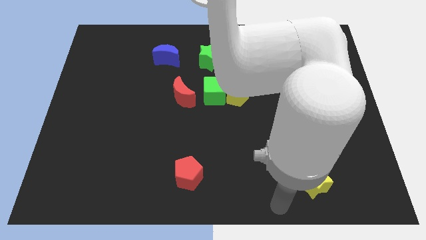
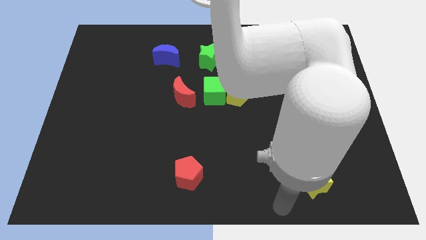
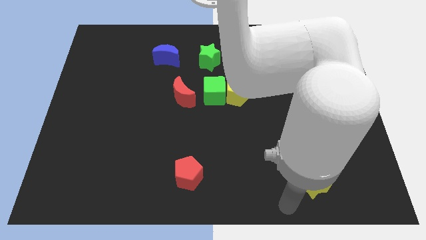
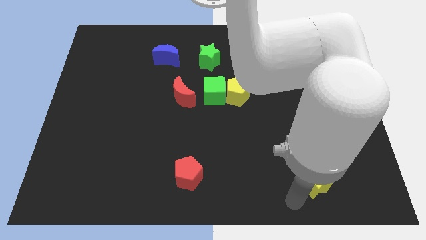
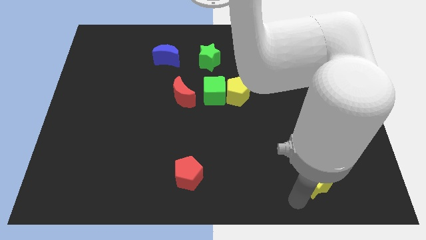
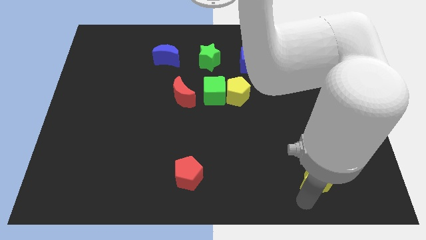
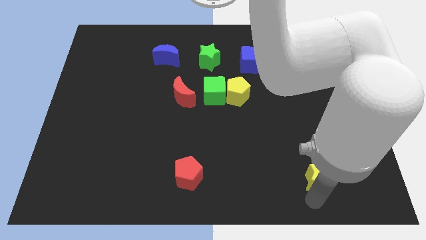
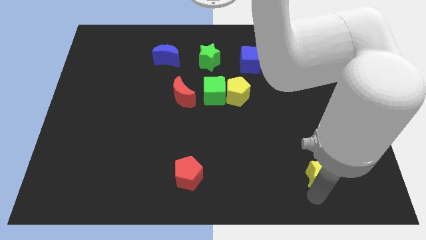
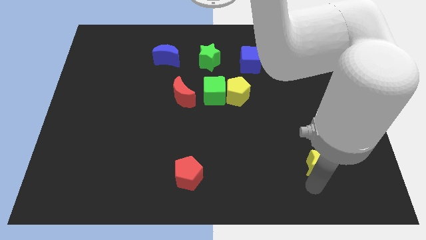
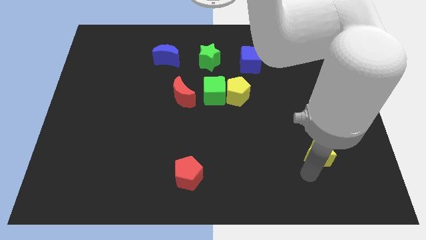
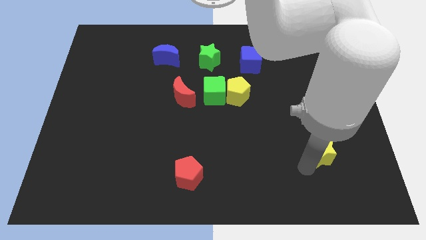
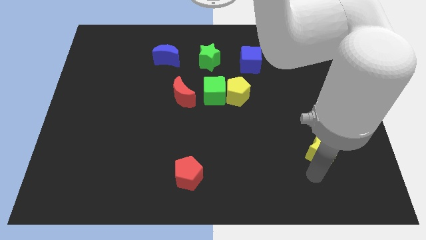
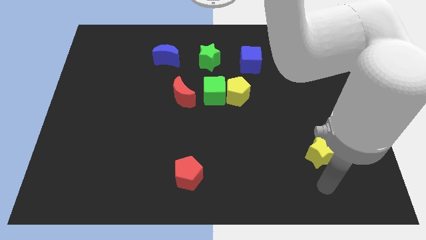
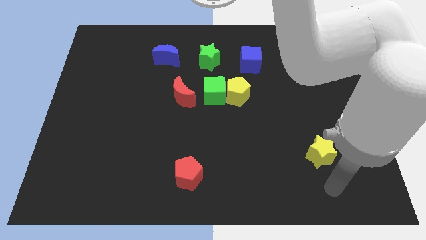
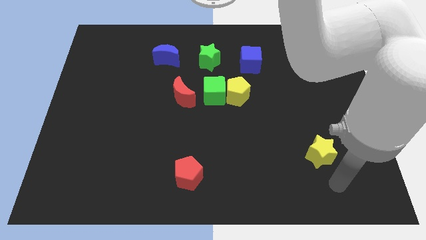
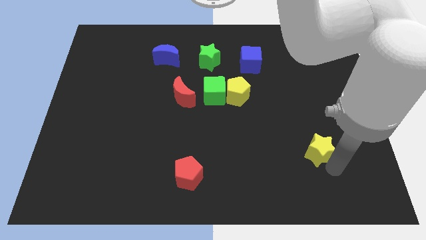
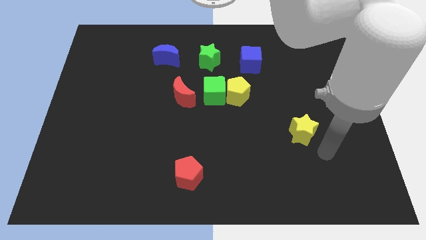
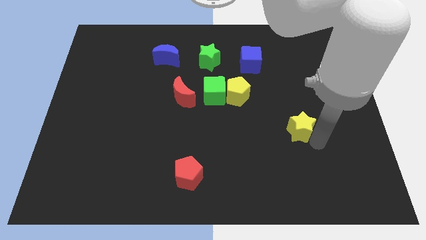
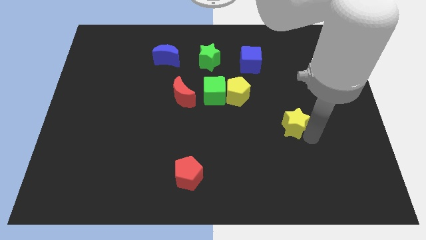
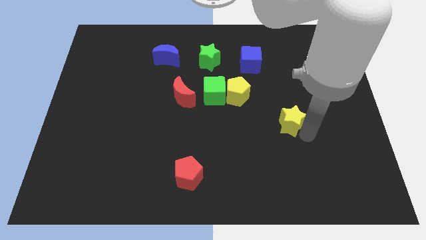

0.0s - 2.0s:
move the yellow star towards top

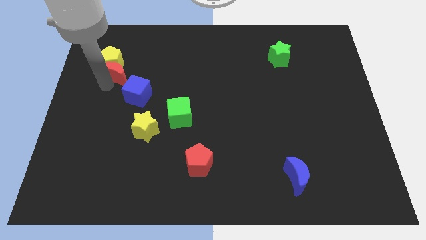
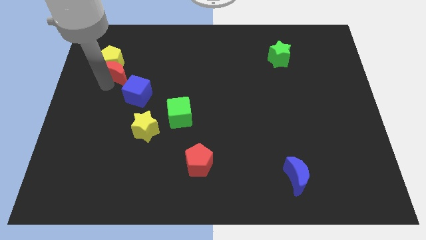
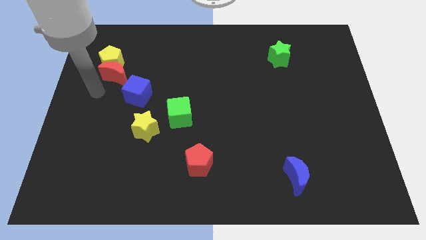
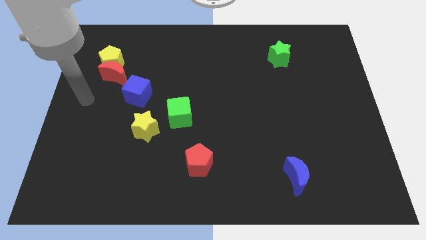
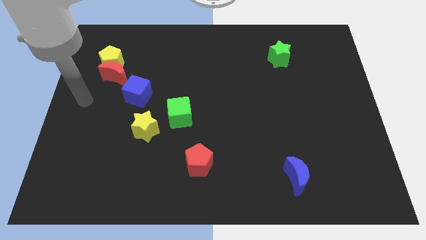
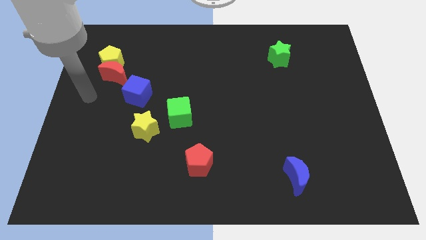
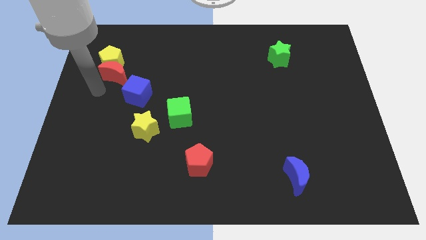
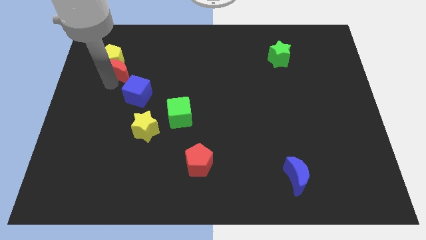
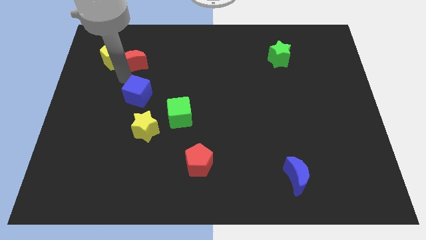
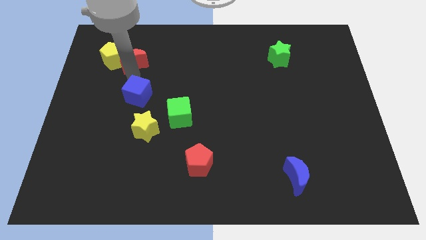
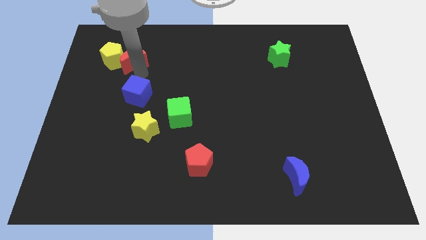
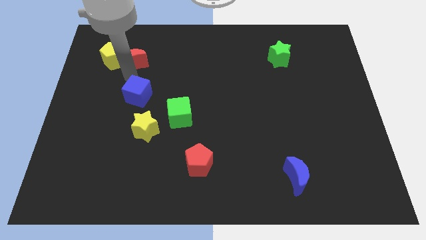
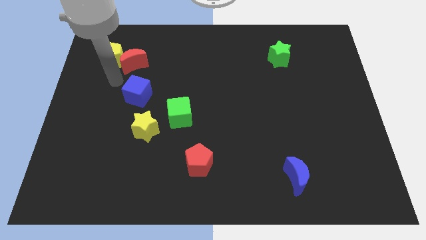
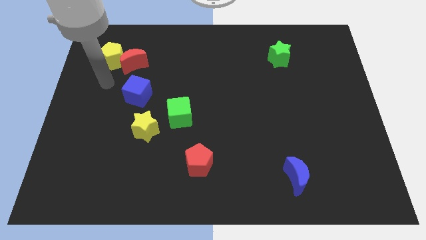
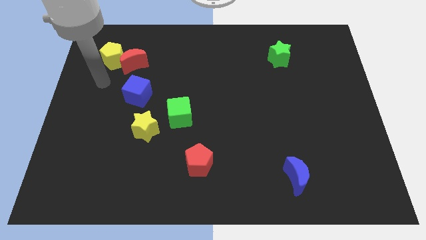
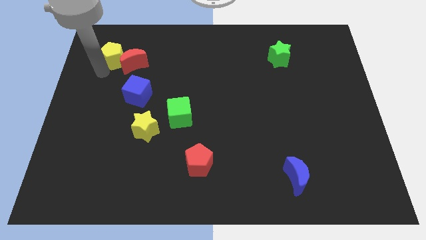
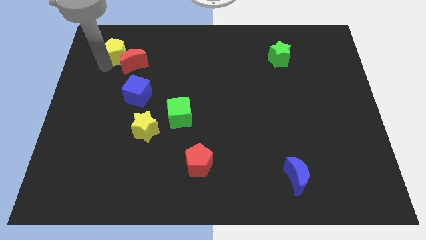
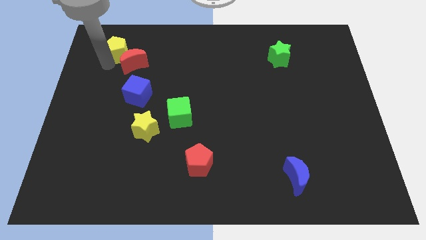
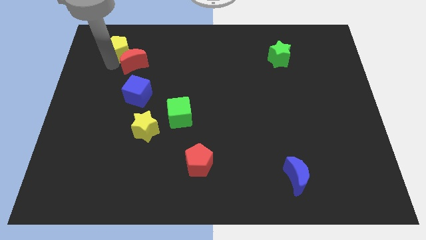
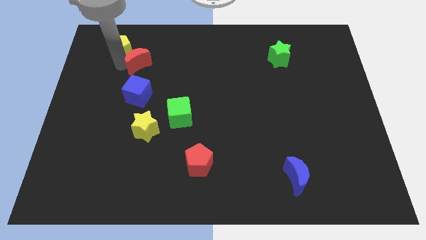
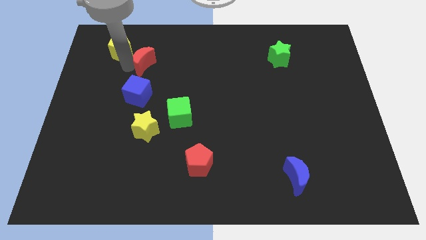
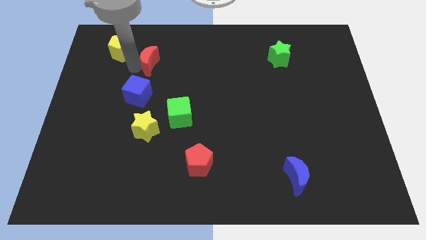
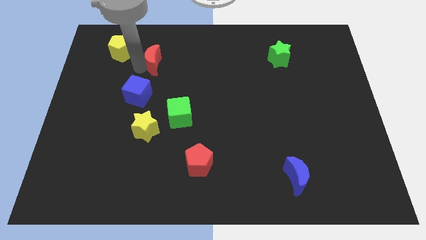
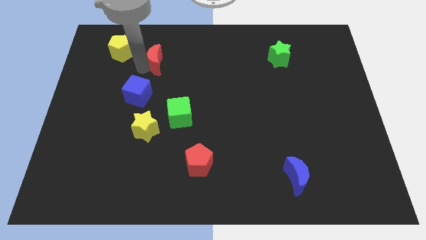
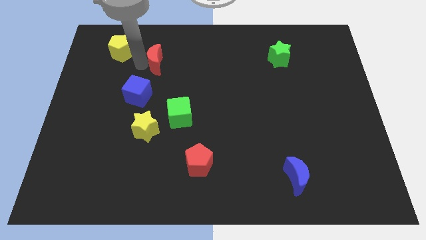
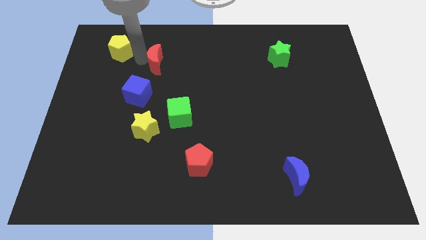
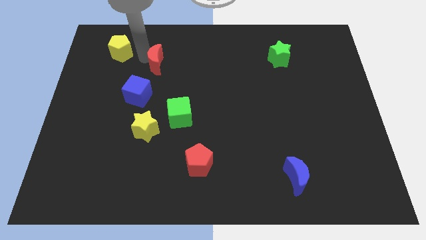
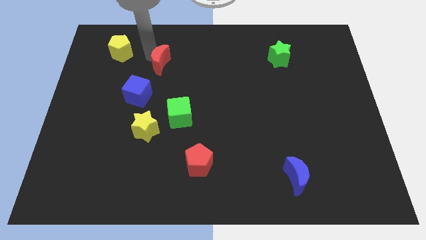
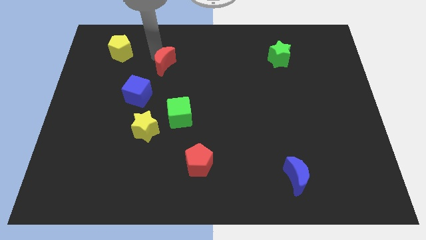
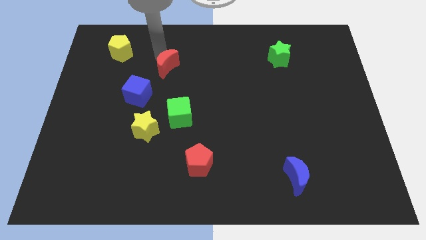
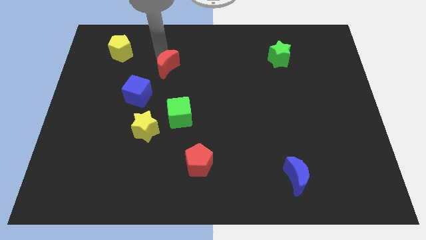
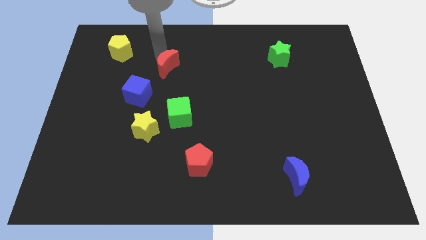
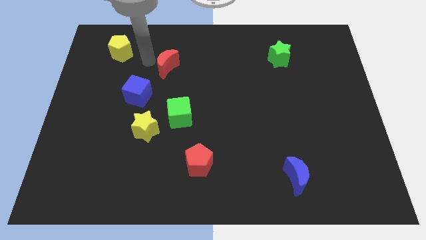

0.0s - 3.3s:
move red moon diagonally top right to the blue cube

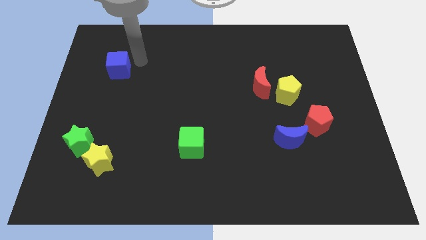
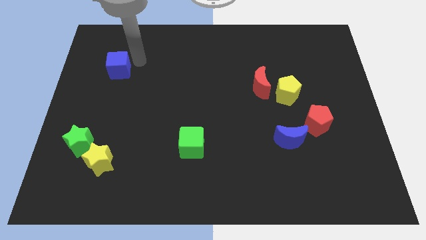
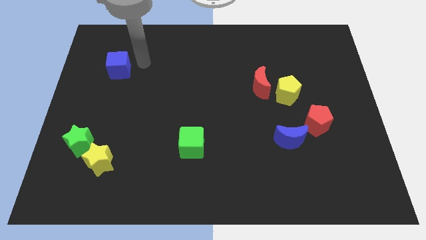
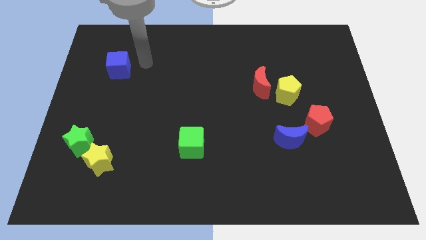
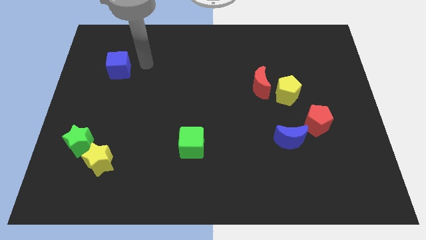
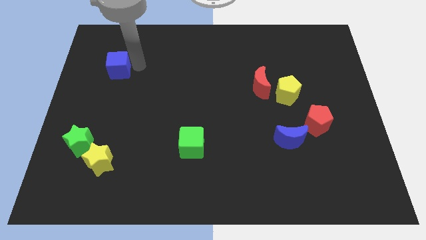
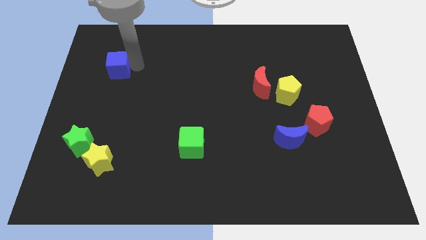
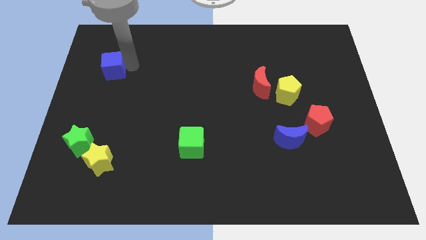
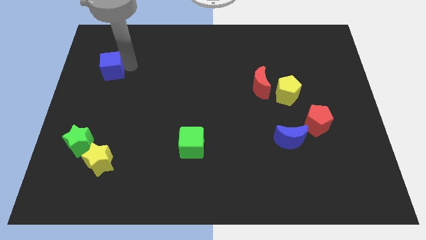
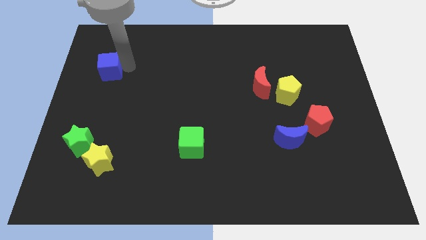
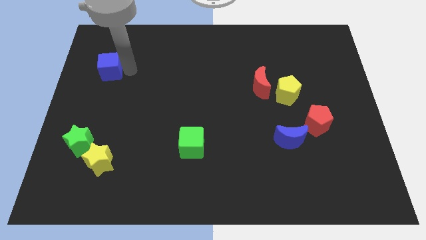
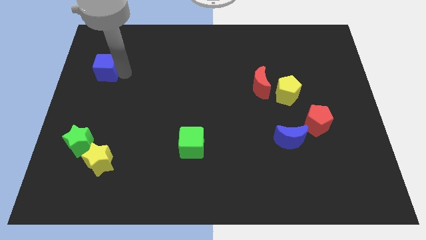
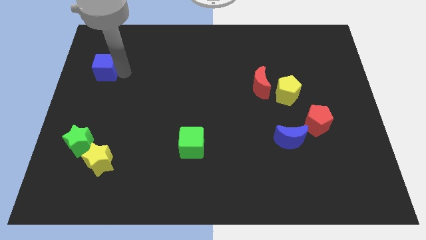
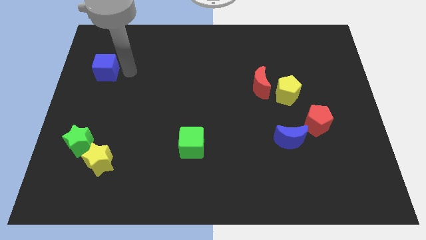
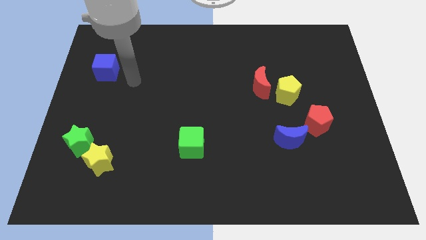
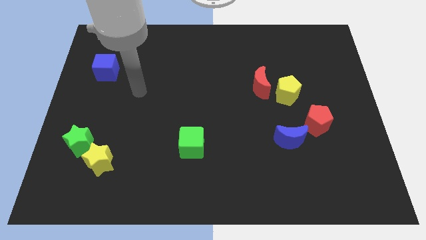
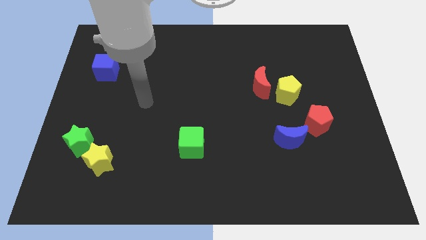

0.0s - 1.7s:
place the blue cube vertically above the green star

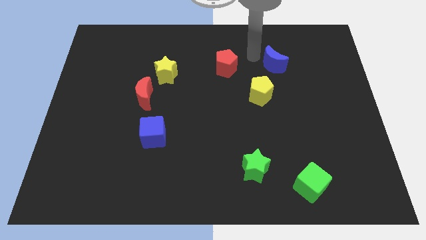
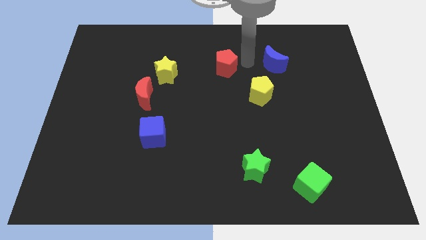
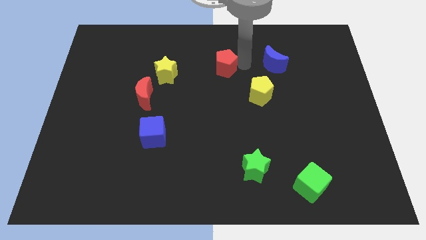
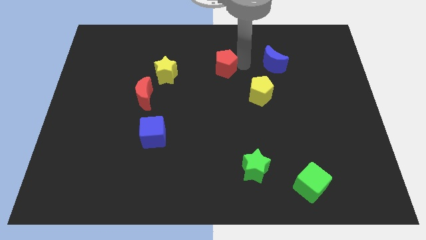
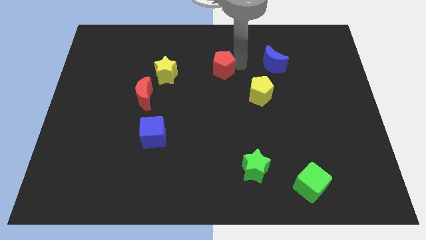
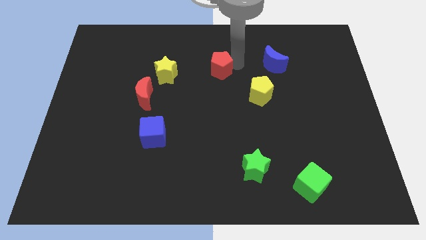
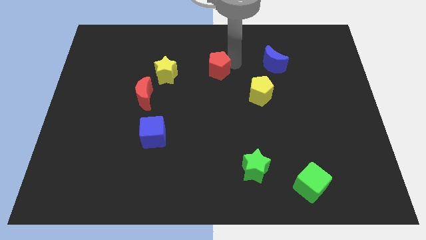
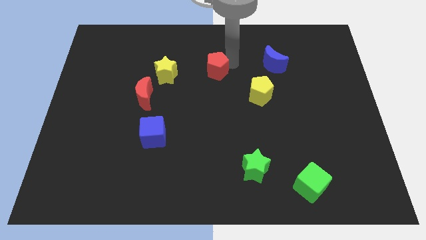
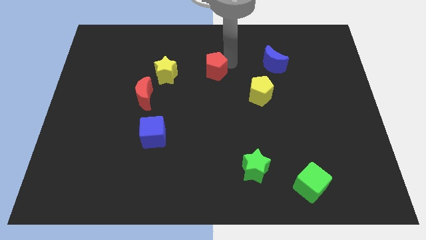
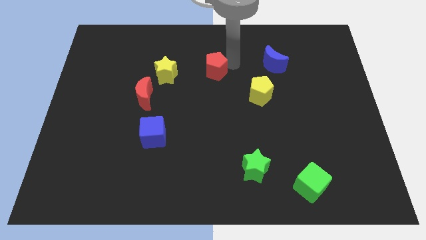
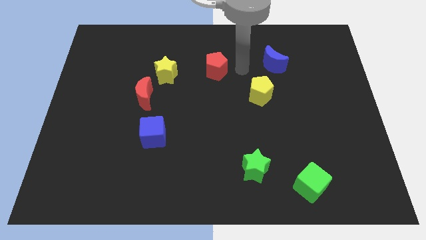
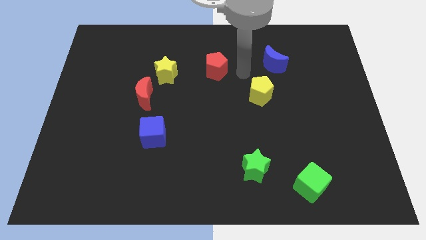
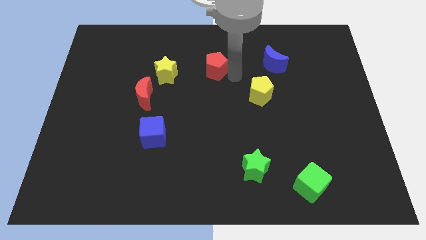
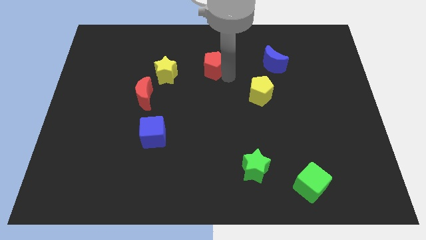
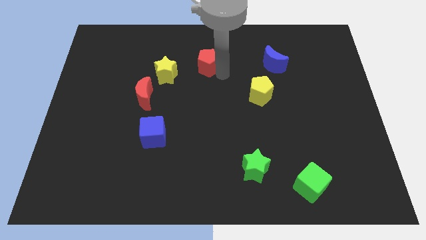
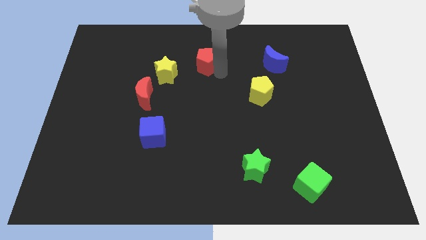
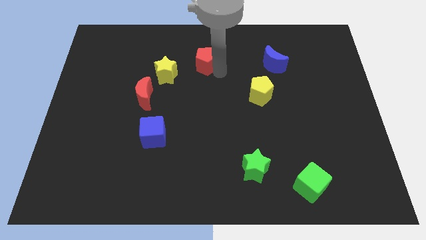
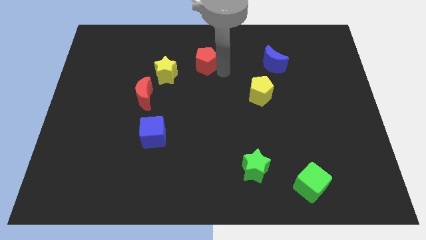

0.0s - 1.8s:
push the red pentagon towards the top of the board

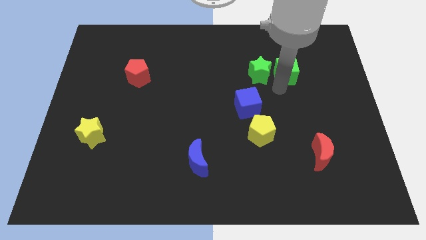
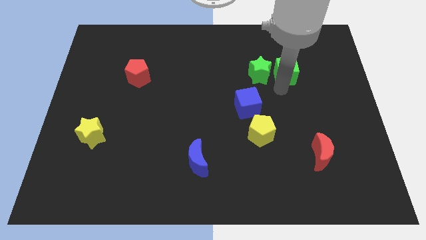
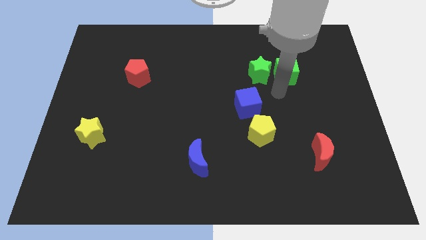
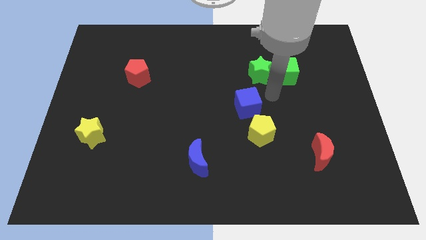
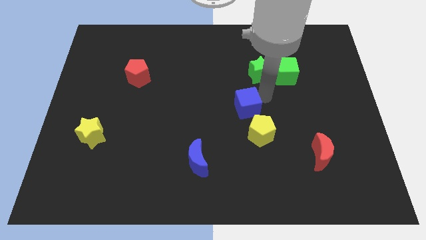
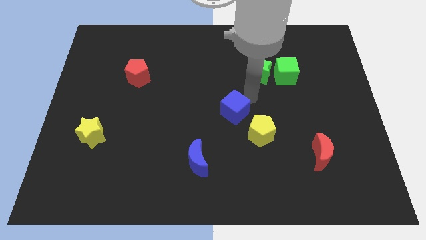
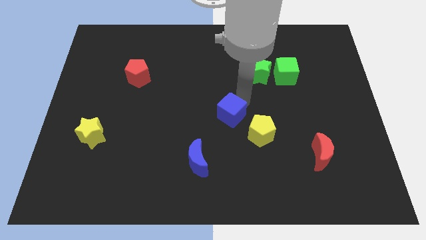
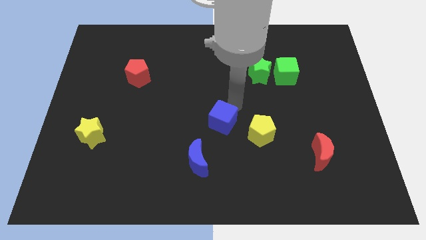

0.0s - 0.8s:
move away blue cube from yellow pentagon
